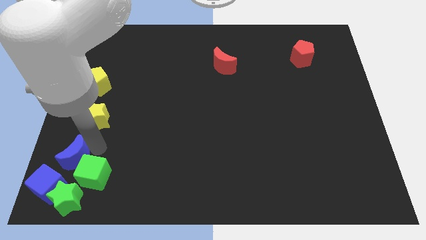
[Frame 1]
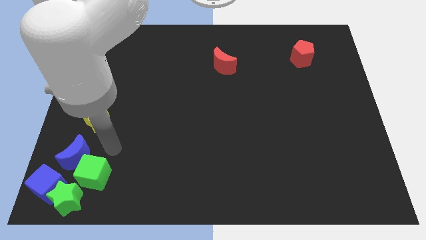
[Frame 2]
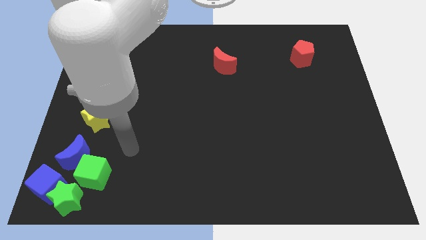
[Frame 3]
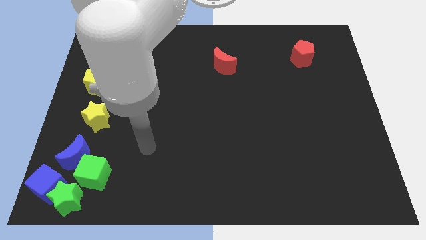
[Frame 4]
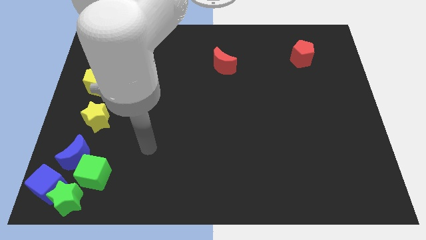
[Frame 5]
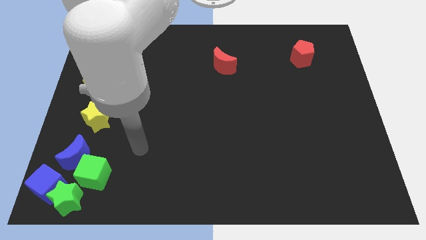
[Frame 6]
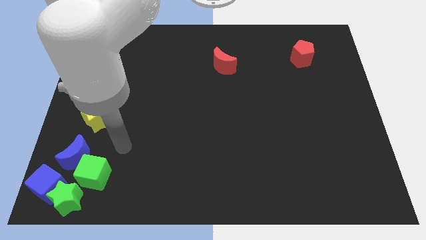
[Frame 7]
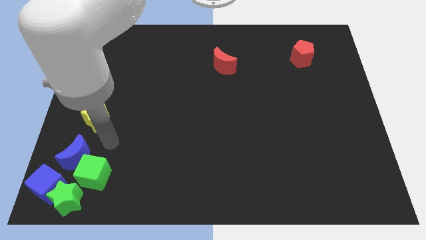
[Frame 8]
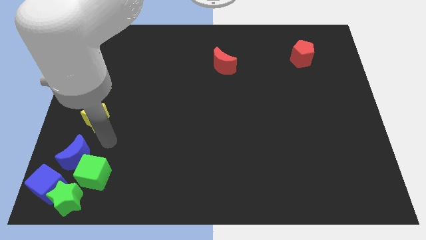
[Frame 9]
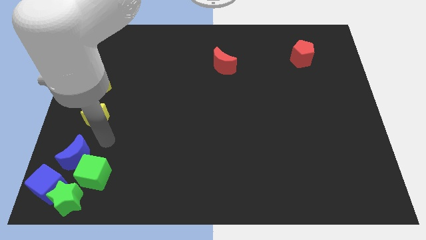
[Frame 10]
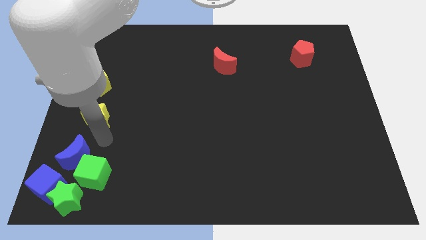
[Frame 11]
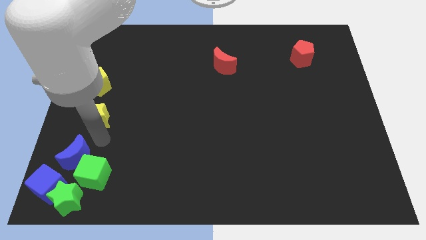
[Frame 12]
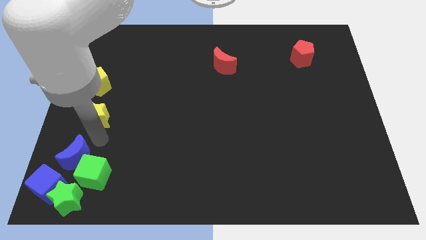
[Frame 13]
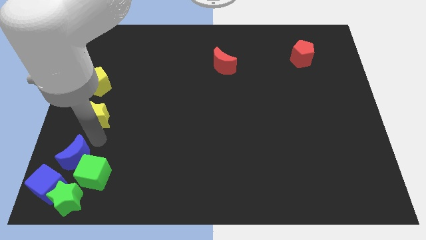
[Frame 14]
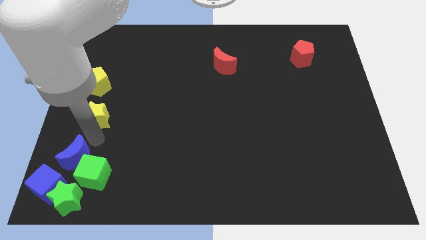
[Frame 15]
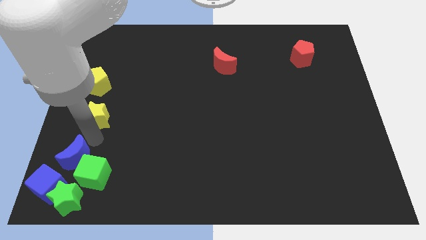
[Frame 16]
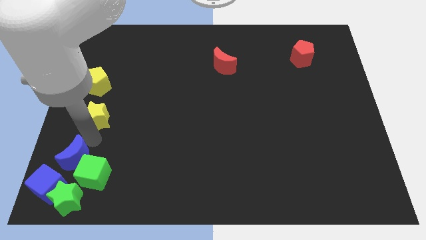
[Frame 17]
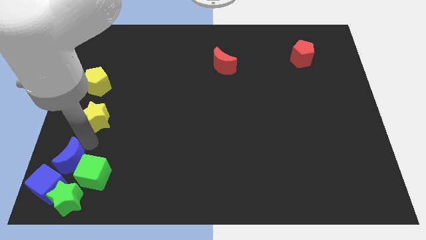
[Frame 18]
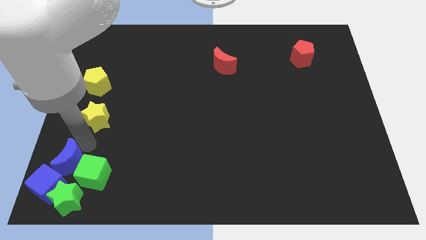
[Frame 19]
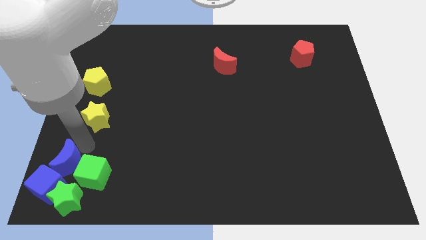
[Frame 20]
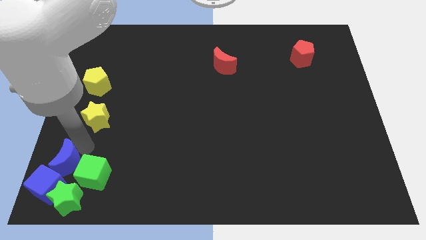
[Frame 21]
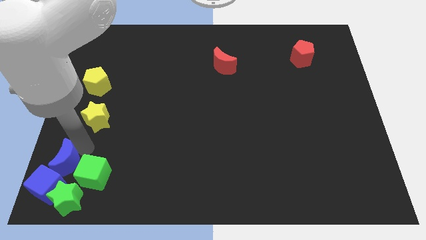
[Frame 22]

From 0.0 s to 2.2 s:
move blue moon above blue cube

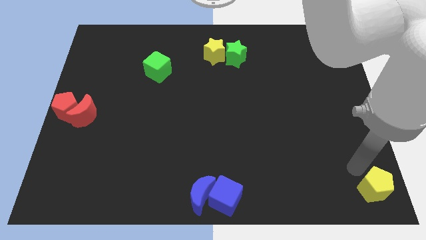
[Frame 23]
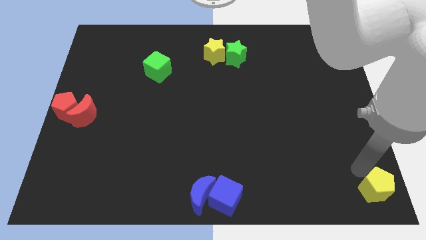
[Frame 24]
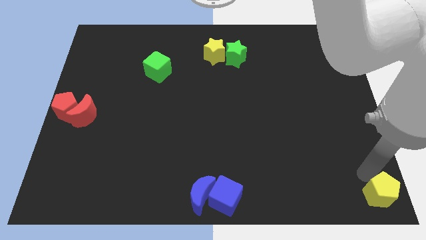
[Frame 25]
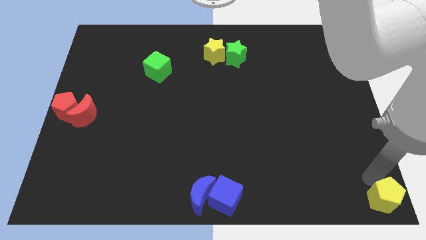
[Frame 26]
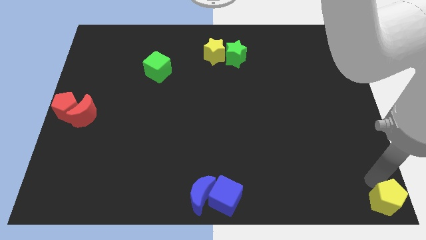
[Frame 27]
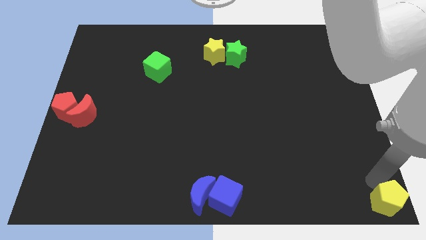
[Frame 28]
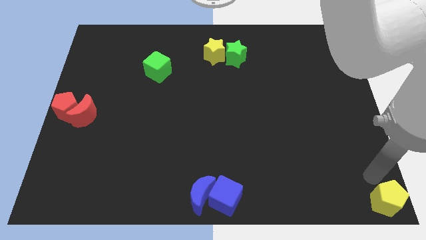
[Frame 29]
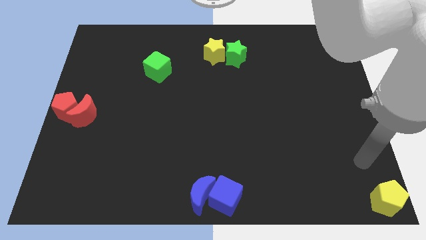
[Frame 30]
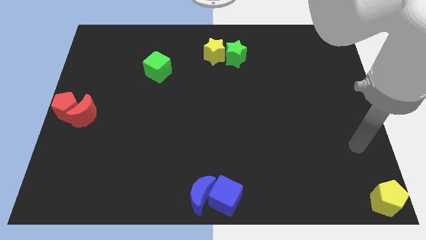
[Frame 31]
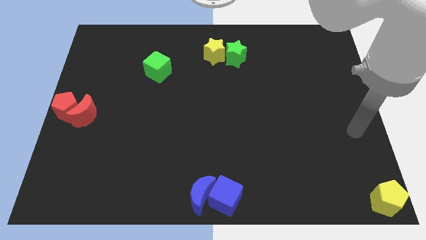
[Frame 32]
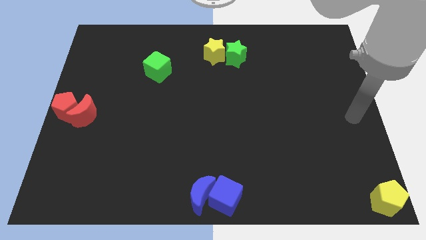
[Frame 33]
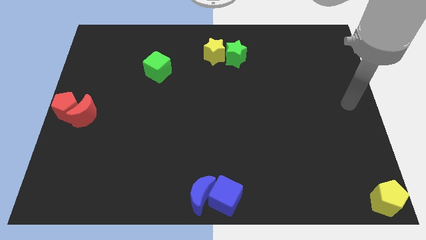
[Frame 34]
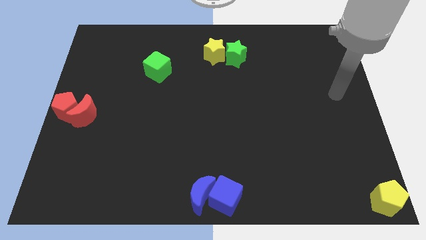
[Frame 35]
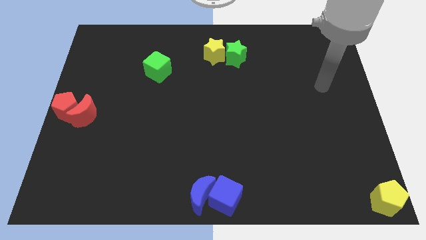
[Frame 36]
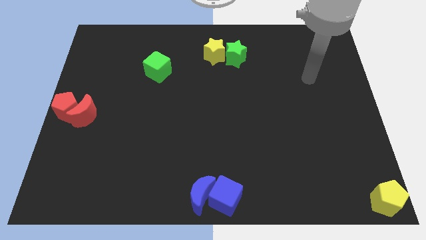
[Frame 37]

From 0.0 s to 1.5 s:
place the yellow pentagon to the right bottom corner of the board

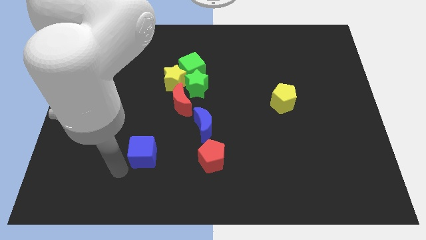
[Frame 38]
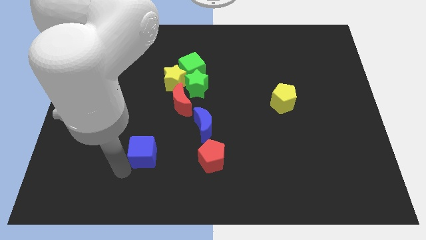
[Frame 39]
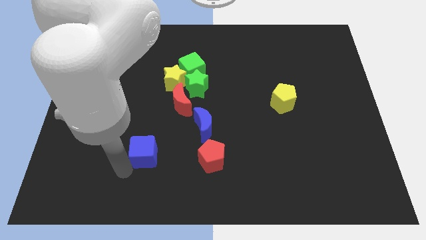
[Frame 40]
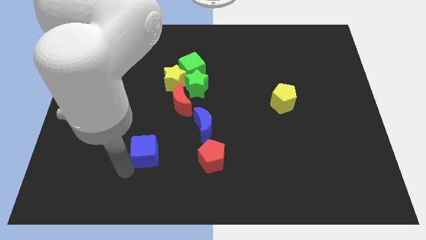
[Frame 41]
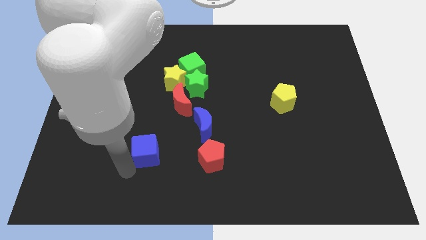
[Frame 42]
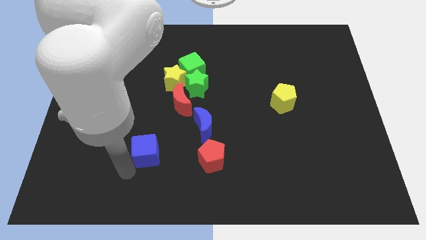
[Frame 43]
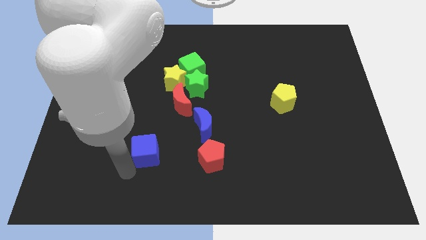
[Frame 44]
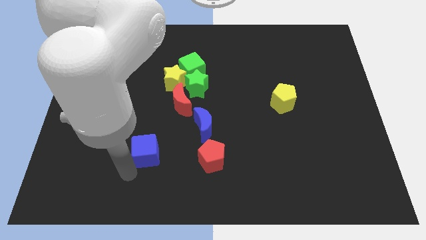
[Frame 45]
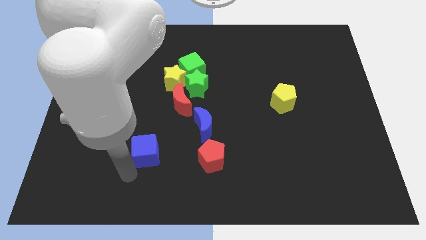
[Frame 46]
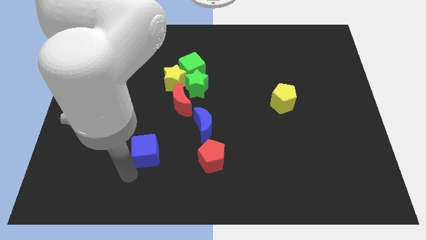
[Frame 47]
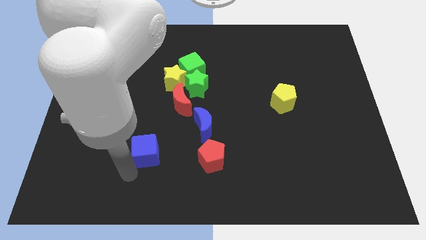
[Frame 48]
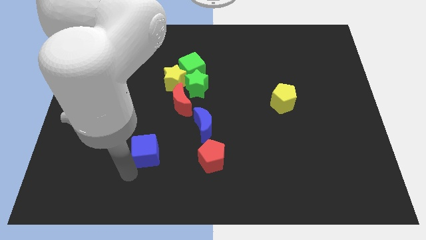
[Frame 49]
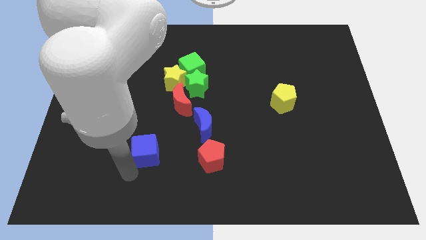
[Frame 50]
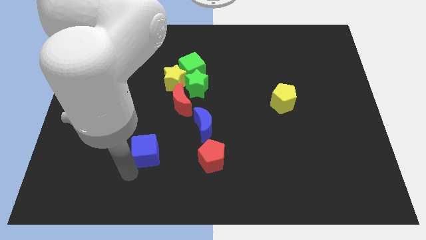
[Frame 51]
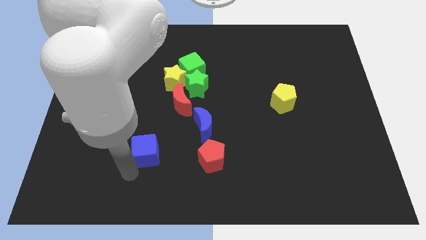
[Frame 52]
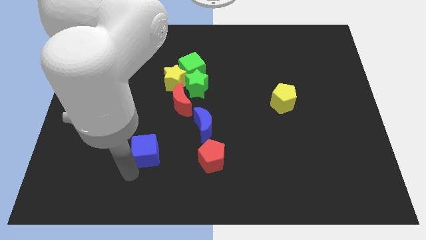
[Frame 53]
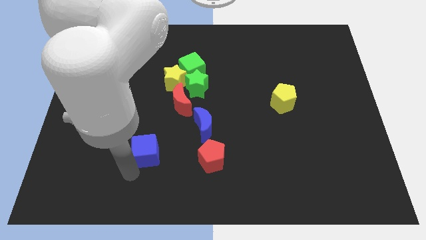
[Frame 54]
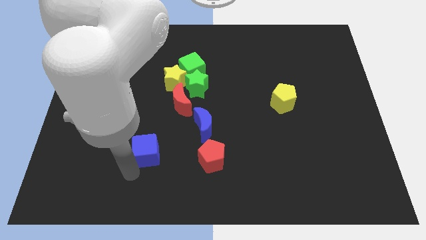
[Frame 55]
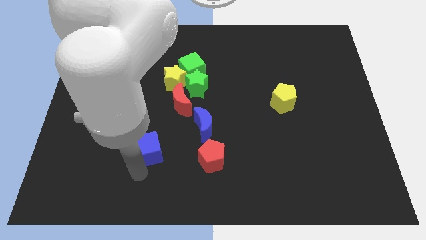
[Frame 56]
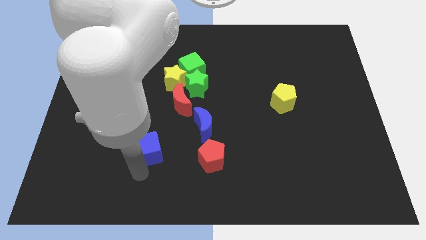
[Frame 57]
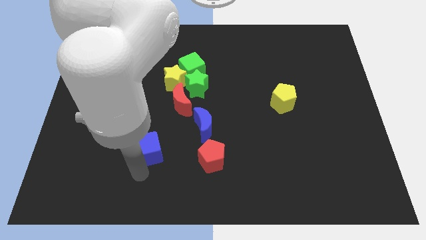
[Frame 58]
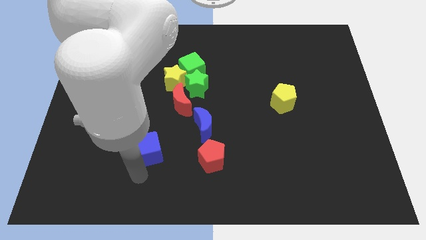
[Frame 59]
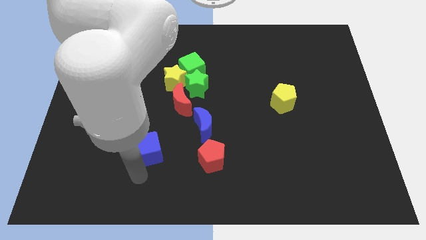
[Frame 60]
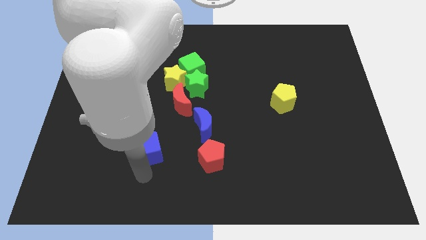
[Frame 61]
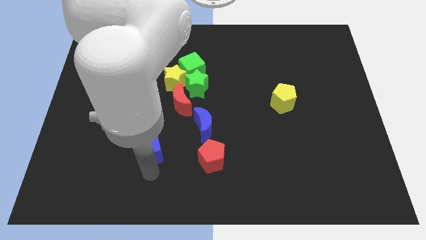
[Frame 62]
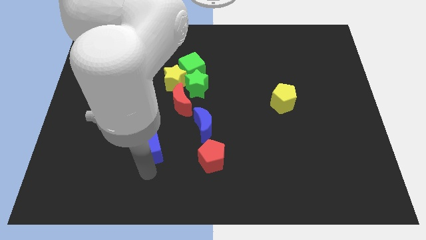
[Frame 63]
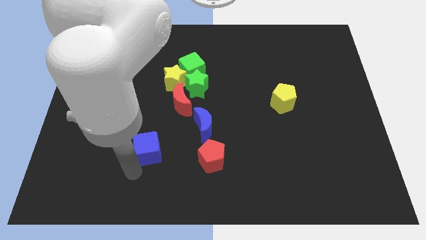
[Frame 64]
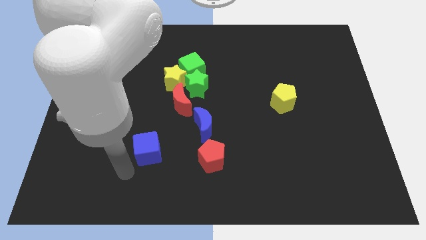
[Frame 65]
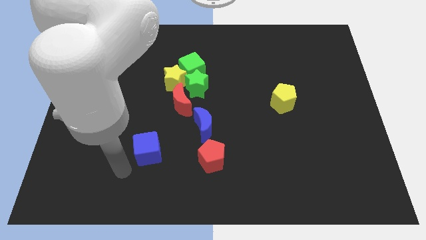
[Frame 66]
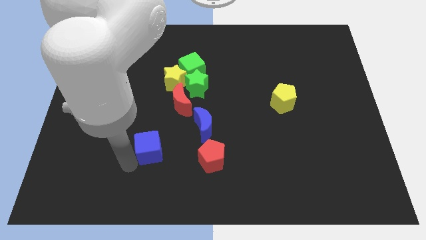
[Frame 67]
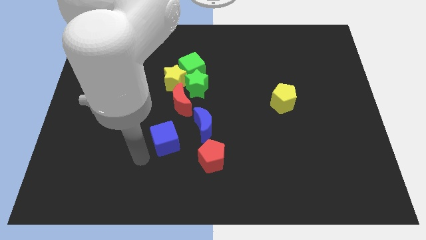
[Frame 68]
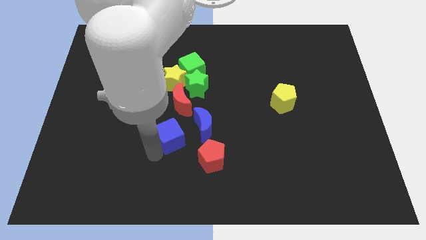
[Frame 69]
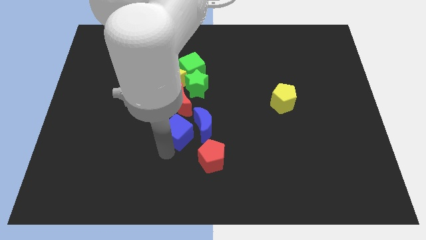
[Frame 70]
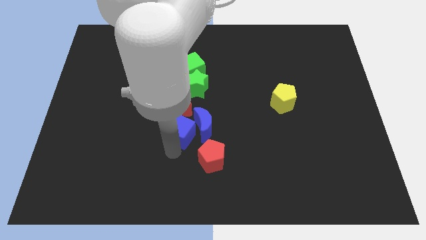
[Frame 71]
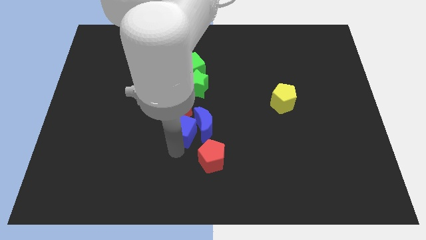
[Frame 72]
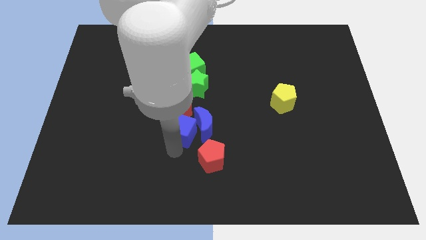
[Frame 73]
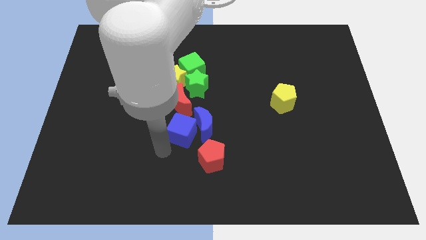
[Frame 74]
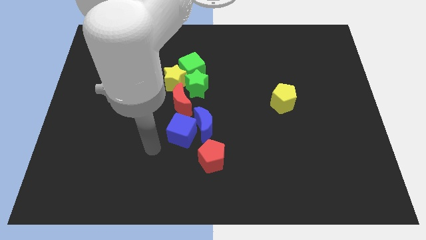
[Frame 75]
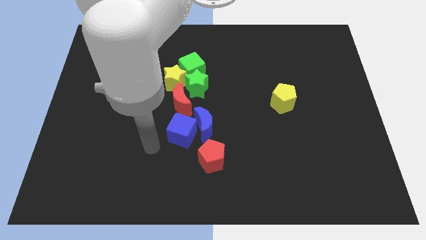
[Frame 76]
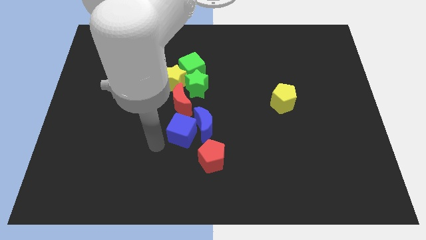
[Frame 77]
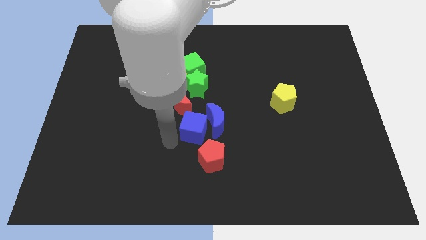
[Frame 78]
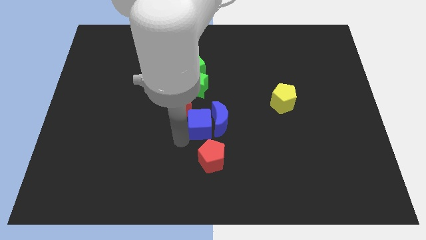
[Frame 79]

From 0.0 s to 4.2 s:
slide blue cube into blue moon

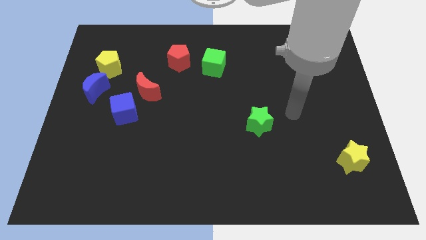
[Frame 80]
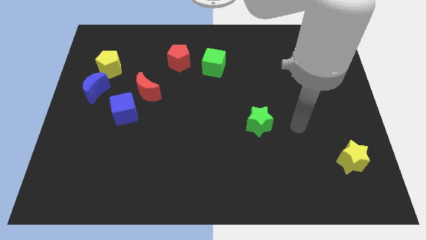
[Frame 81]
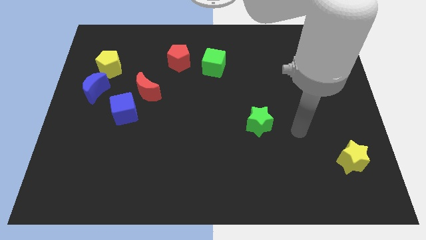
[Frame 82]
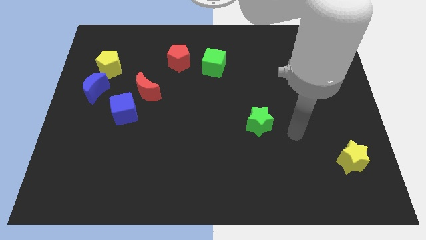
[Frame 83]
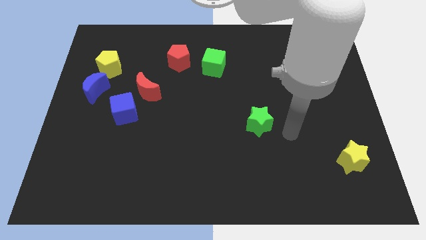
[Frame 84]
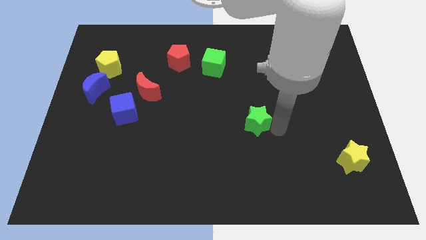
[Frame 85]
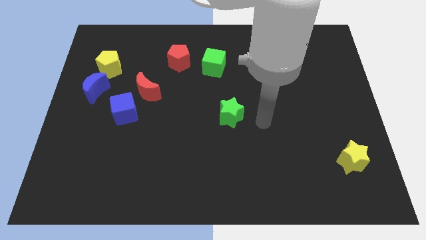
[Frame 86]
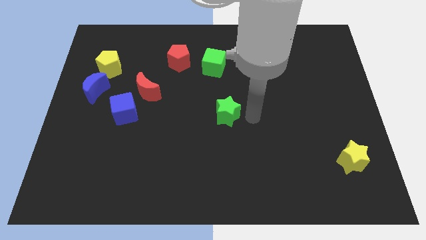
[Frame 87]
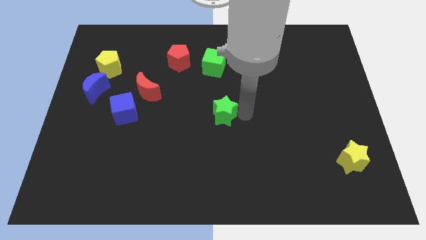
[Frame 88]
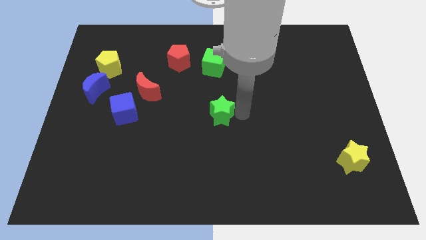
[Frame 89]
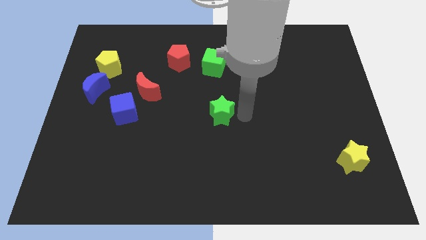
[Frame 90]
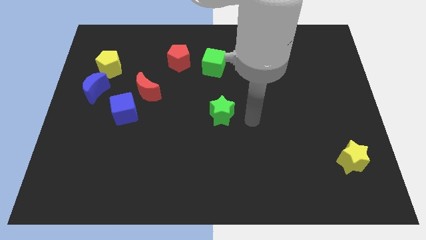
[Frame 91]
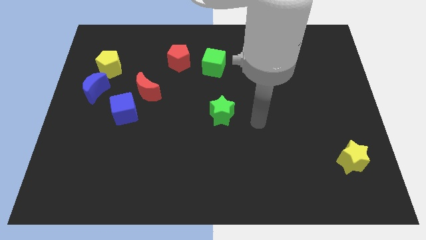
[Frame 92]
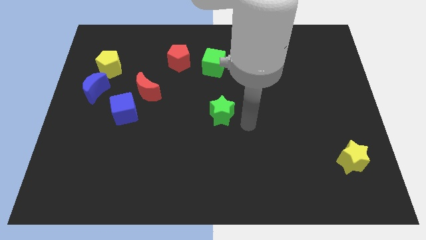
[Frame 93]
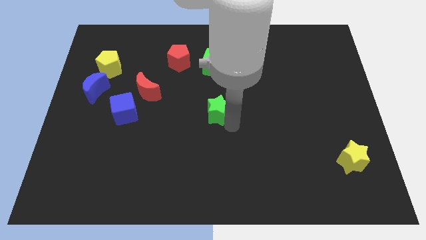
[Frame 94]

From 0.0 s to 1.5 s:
place green star to the bottom of green cube
